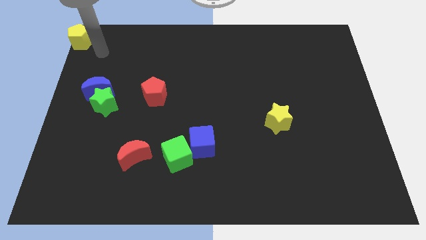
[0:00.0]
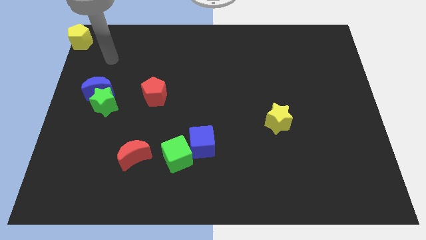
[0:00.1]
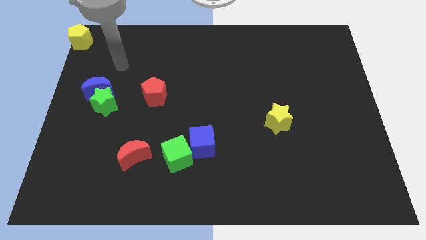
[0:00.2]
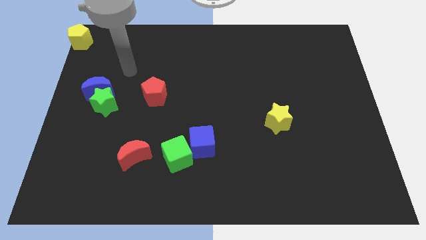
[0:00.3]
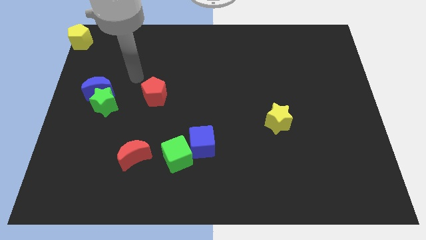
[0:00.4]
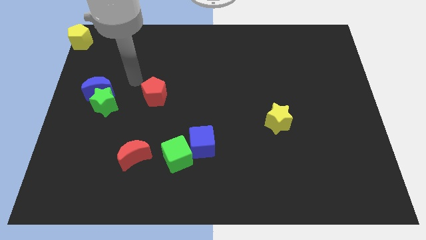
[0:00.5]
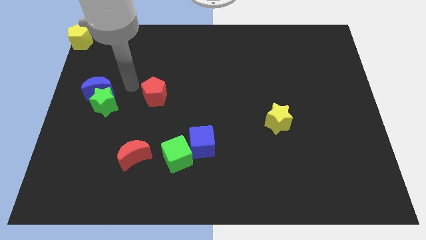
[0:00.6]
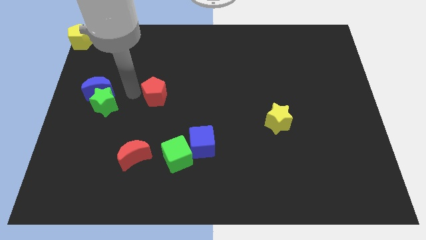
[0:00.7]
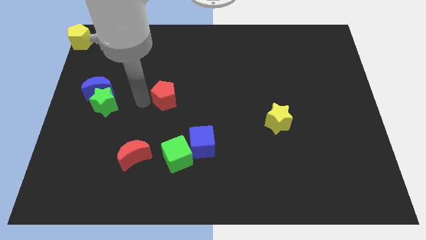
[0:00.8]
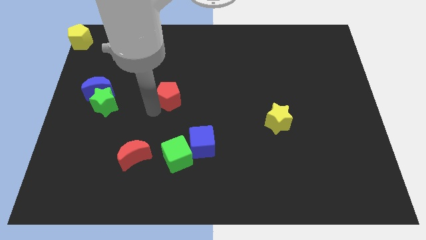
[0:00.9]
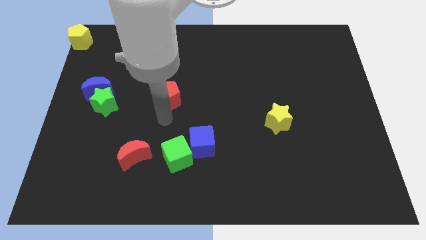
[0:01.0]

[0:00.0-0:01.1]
push the red pentagon slightly to the right

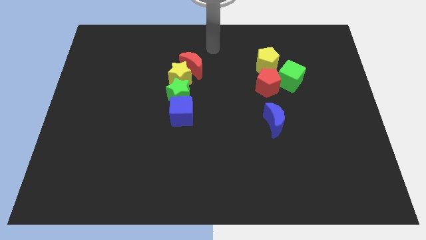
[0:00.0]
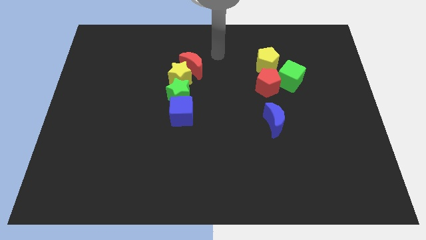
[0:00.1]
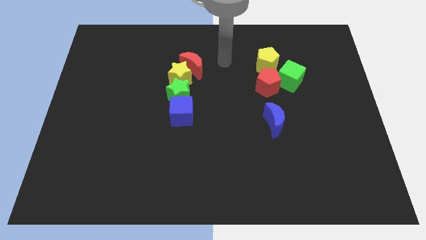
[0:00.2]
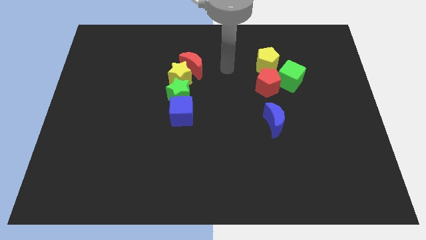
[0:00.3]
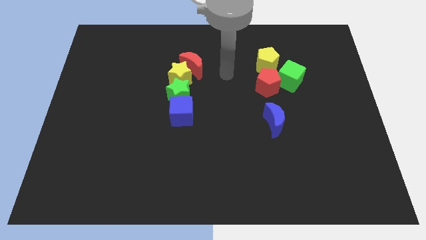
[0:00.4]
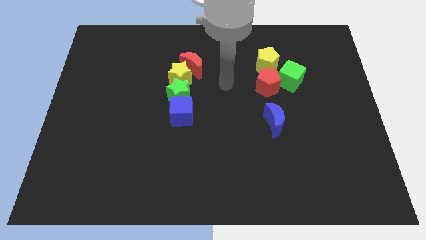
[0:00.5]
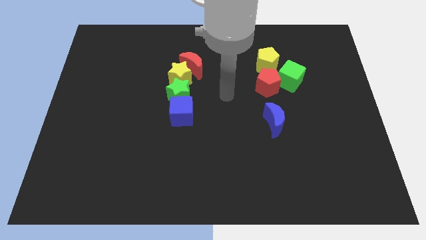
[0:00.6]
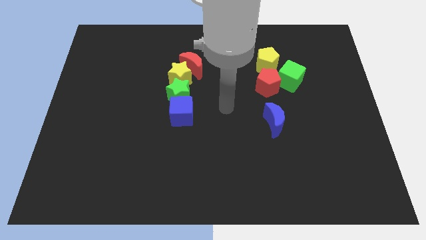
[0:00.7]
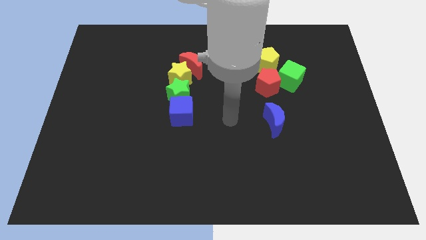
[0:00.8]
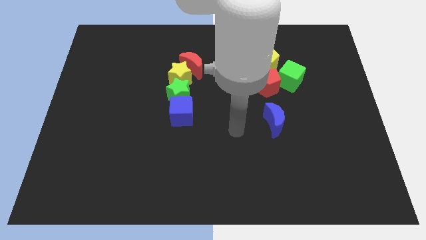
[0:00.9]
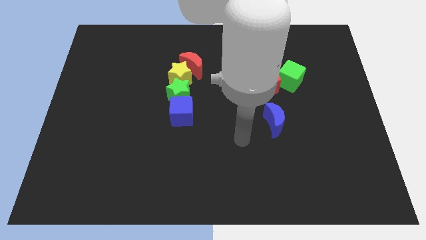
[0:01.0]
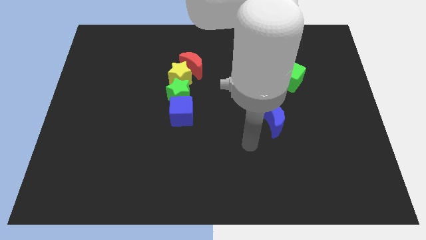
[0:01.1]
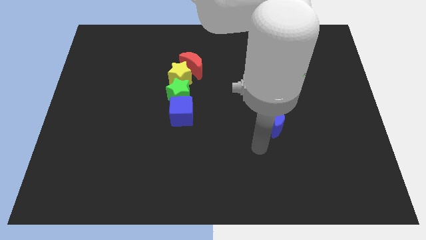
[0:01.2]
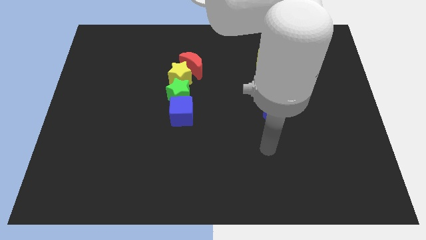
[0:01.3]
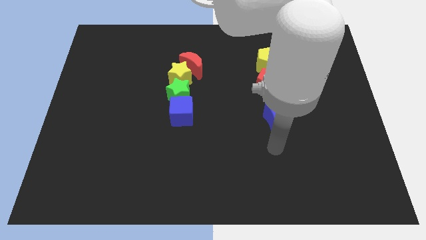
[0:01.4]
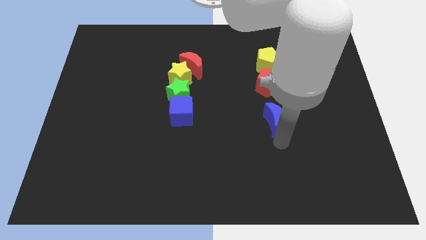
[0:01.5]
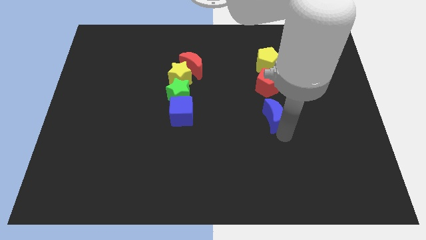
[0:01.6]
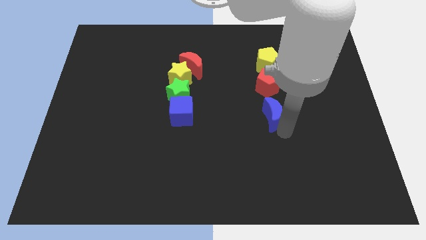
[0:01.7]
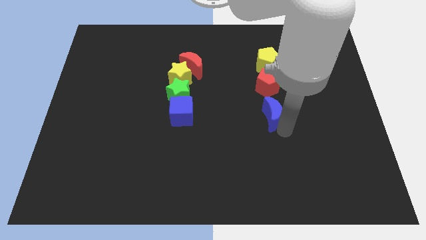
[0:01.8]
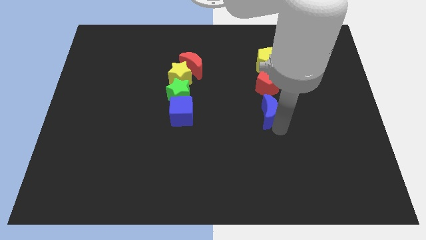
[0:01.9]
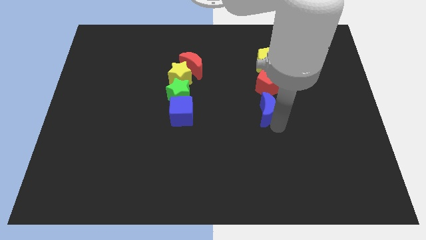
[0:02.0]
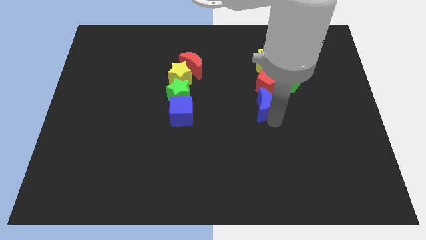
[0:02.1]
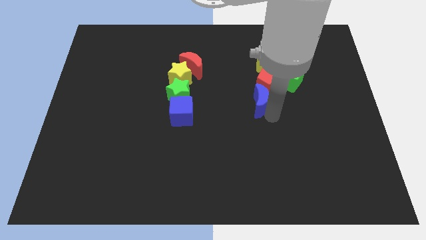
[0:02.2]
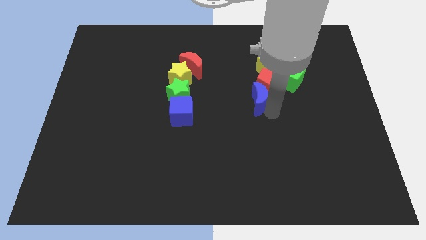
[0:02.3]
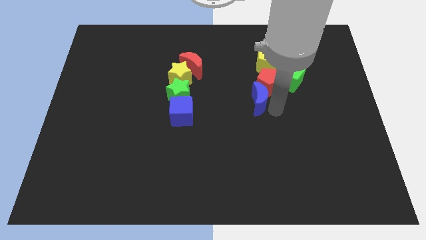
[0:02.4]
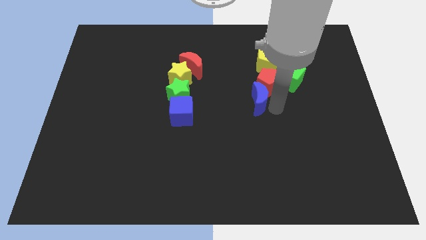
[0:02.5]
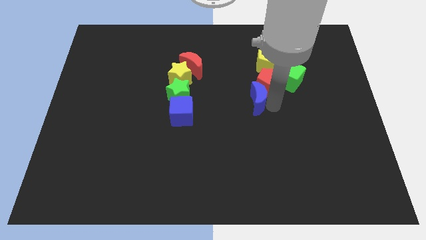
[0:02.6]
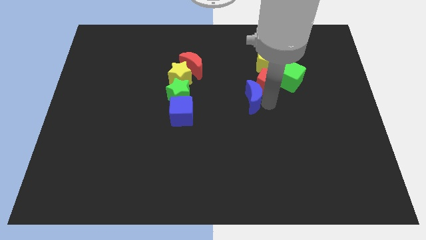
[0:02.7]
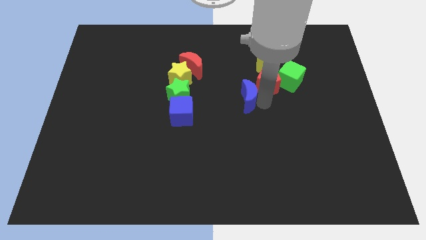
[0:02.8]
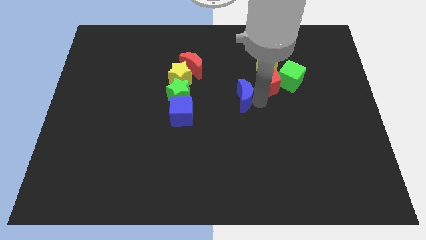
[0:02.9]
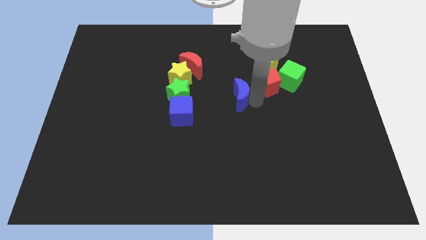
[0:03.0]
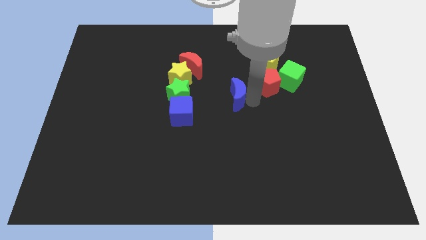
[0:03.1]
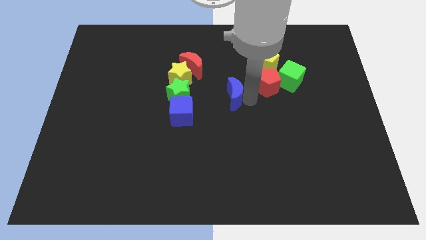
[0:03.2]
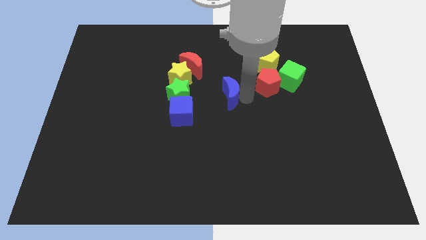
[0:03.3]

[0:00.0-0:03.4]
place blue crescent towards the centre of the board

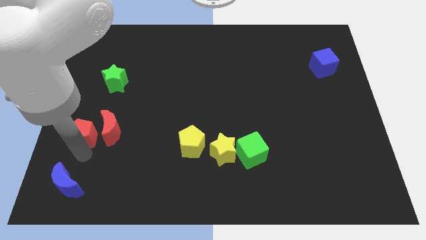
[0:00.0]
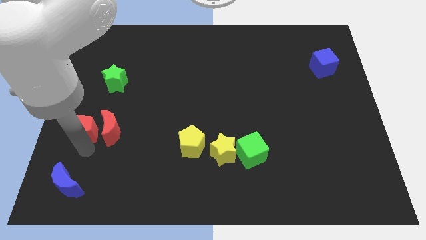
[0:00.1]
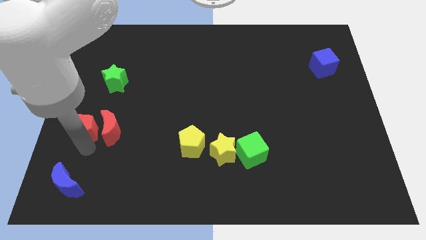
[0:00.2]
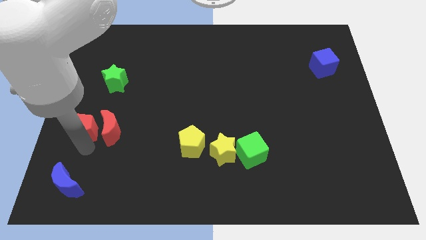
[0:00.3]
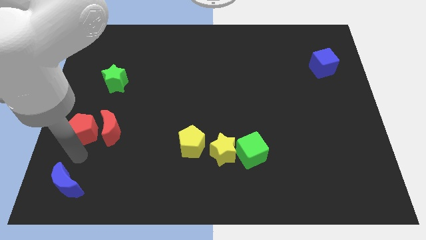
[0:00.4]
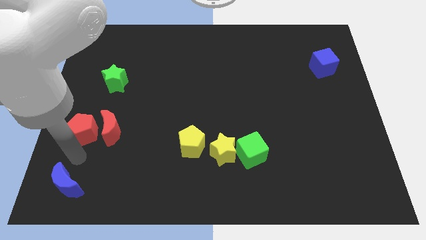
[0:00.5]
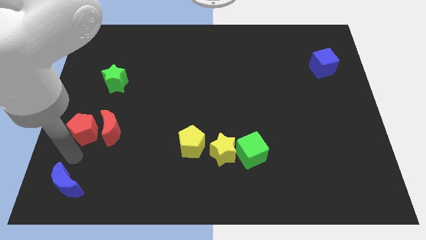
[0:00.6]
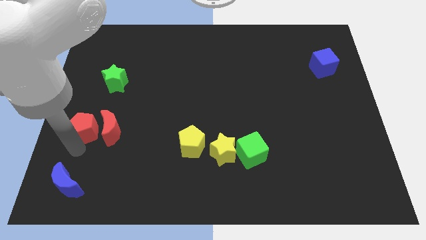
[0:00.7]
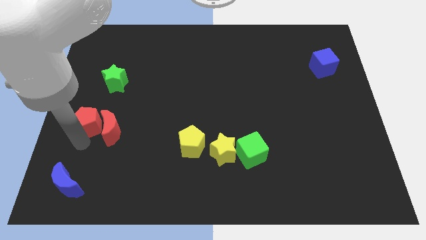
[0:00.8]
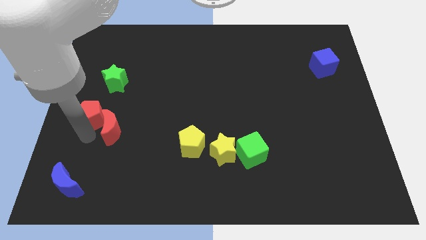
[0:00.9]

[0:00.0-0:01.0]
place red pentagon adjacent to red moon

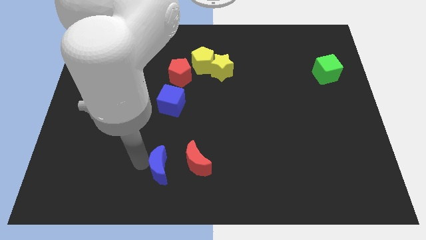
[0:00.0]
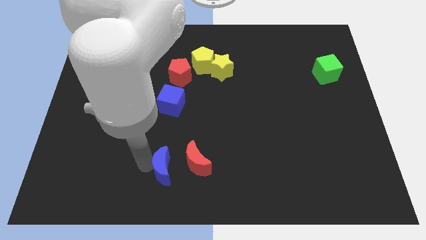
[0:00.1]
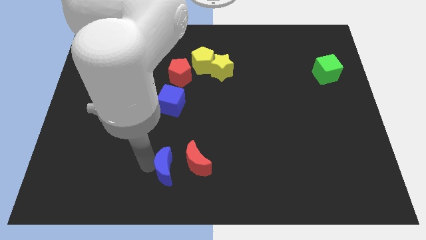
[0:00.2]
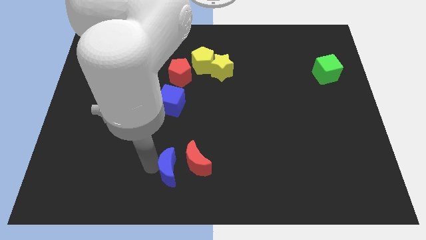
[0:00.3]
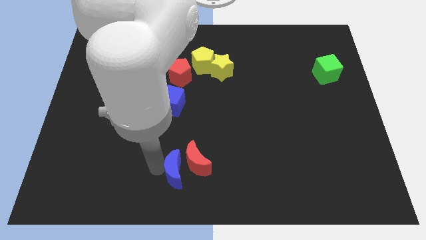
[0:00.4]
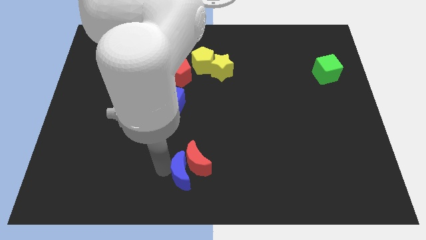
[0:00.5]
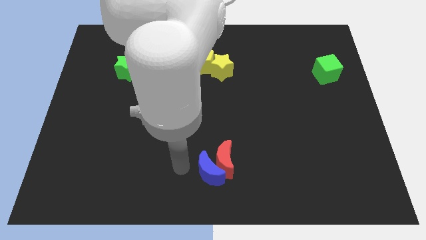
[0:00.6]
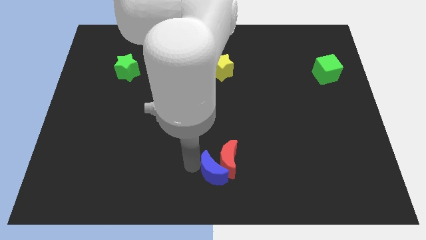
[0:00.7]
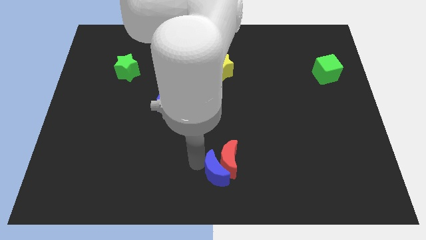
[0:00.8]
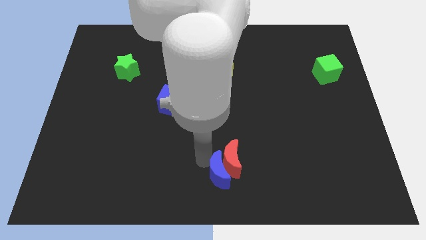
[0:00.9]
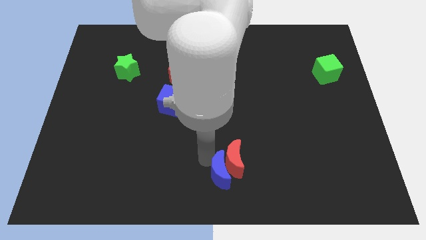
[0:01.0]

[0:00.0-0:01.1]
push the blue moon into the red moon

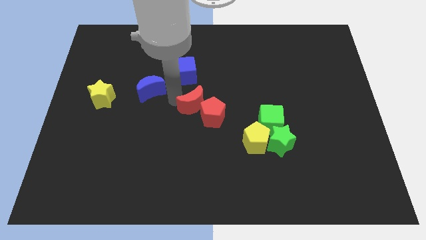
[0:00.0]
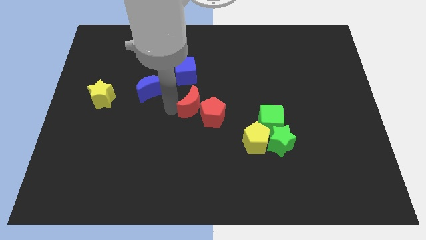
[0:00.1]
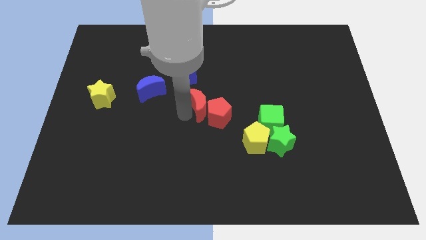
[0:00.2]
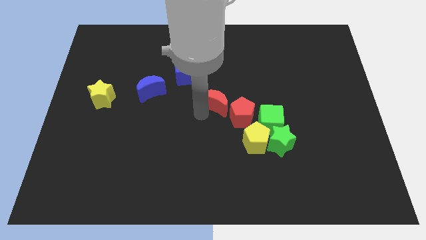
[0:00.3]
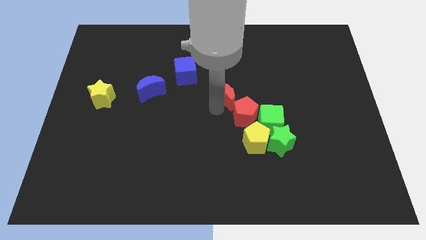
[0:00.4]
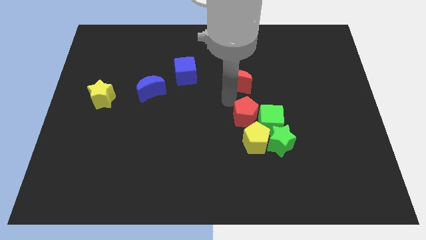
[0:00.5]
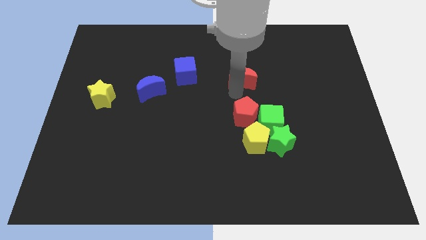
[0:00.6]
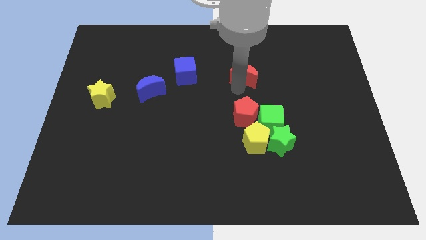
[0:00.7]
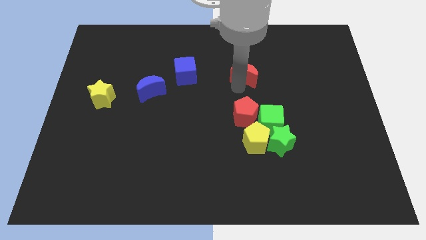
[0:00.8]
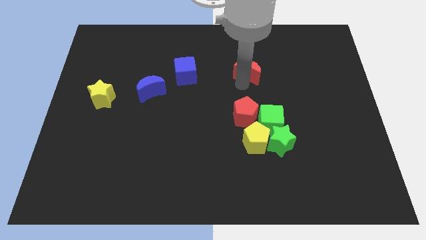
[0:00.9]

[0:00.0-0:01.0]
separate the red moon from red pentagon

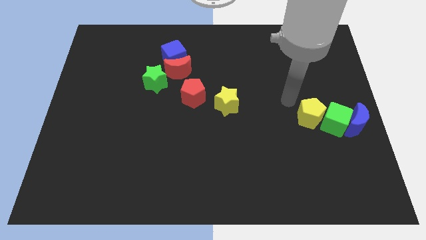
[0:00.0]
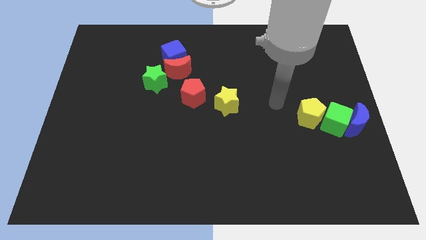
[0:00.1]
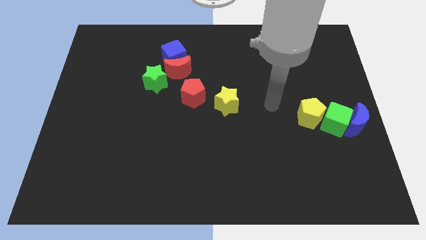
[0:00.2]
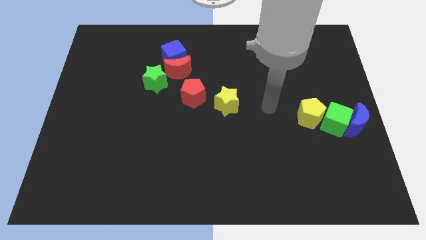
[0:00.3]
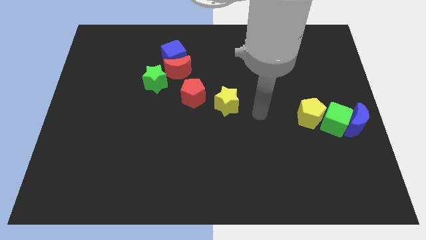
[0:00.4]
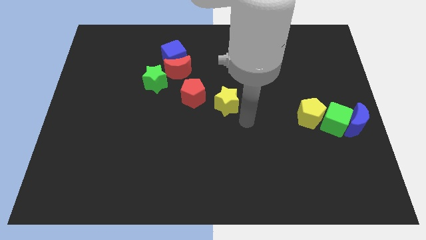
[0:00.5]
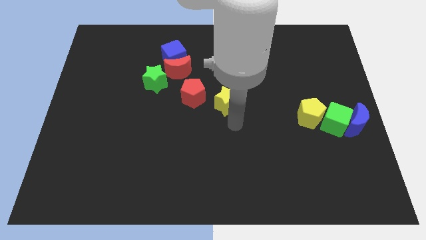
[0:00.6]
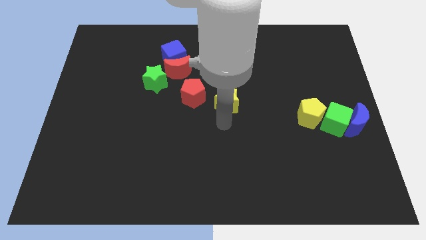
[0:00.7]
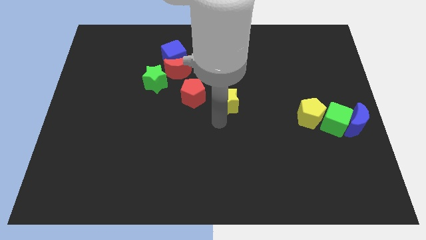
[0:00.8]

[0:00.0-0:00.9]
go away from the yellow pentagon

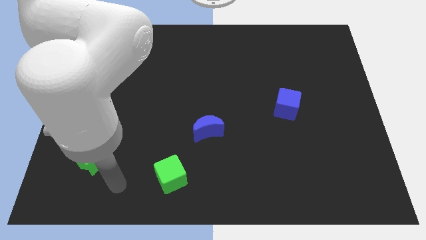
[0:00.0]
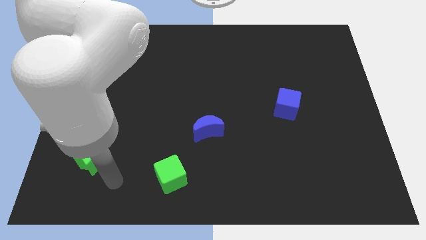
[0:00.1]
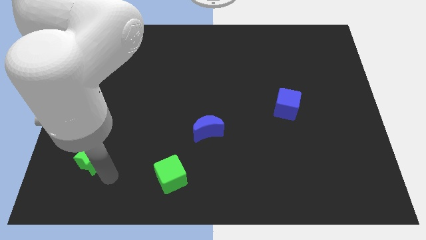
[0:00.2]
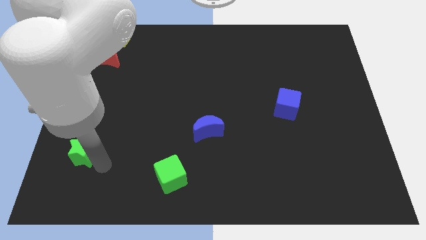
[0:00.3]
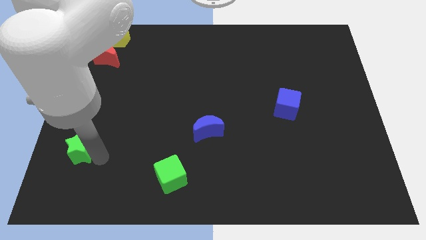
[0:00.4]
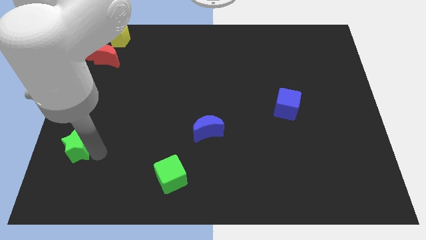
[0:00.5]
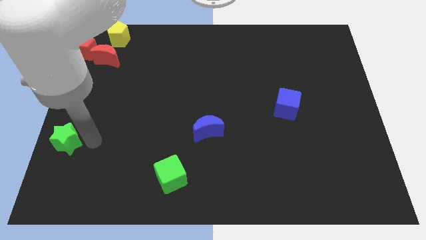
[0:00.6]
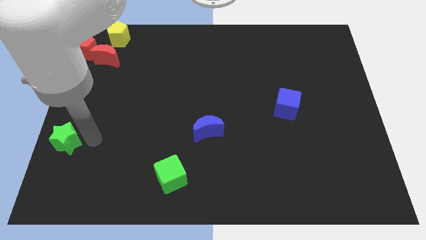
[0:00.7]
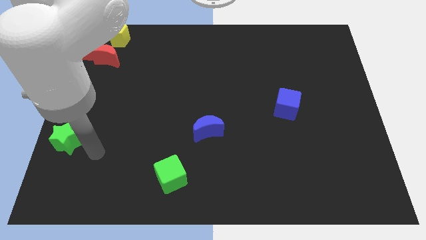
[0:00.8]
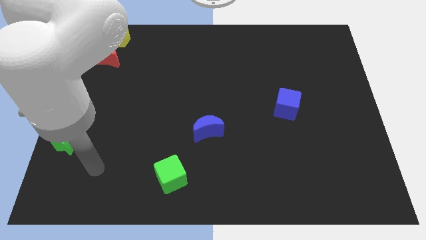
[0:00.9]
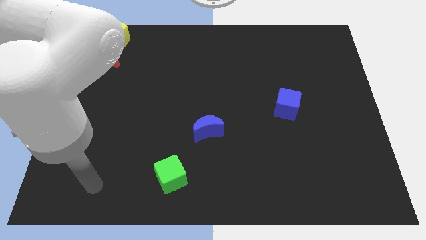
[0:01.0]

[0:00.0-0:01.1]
push the green star towards the top side of the board
